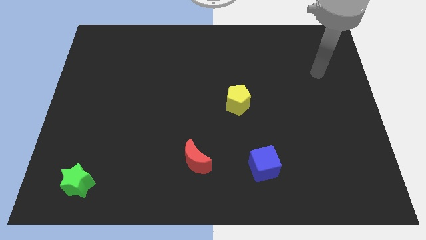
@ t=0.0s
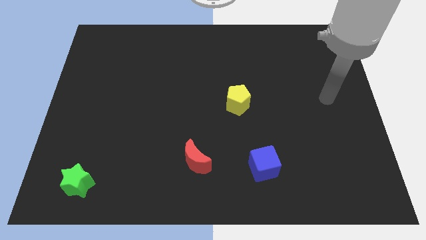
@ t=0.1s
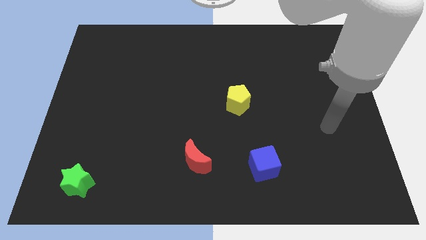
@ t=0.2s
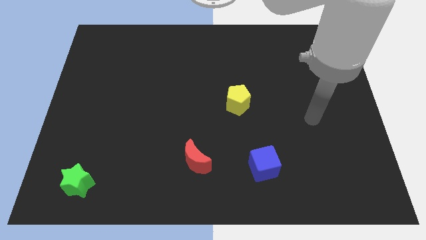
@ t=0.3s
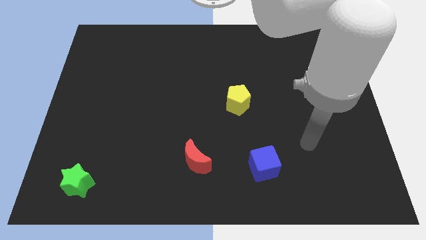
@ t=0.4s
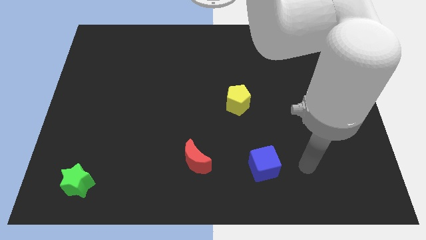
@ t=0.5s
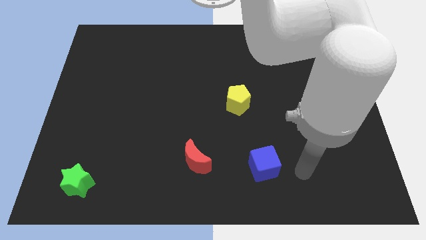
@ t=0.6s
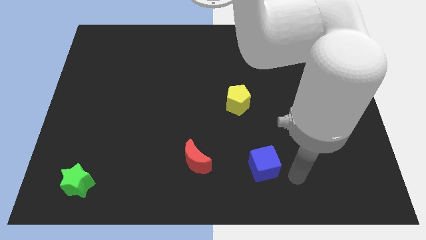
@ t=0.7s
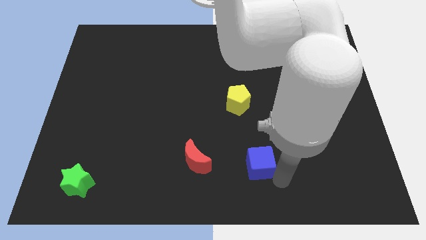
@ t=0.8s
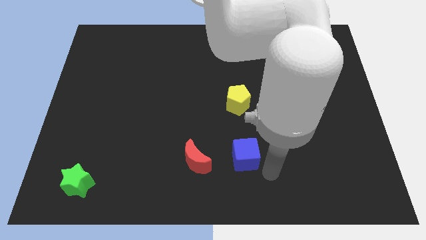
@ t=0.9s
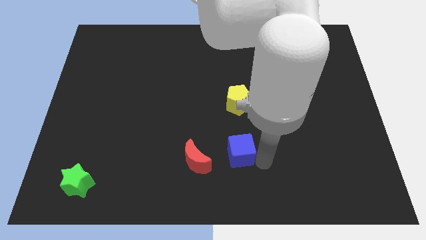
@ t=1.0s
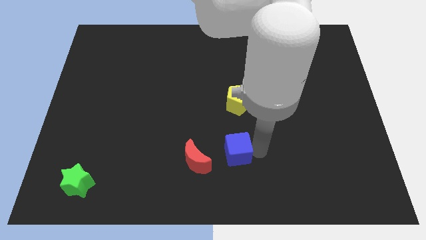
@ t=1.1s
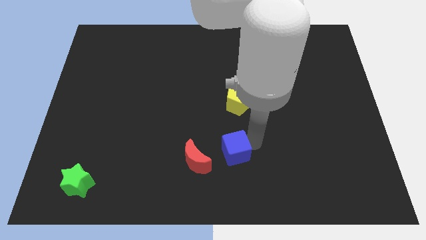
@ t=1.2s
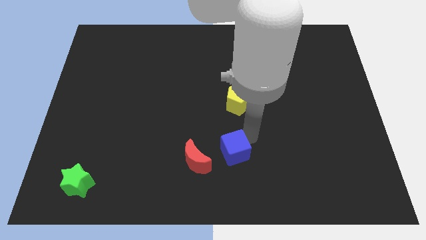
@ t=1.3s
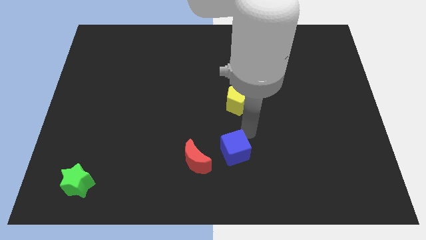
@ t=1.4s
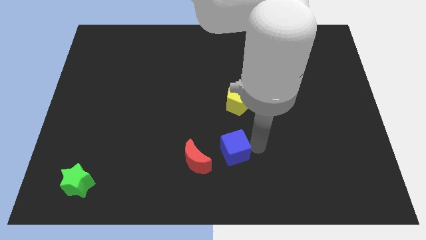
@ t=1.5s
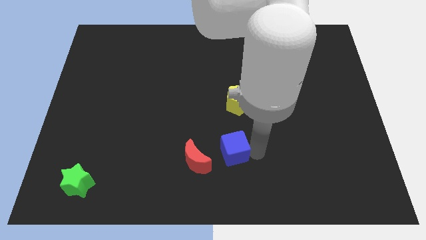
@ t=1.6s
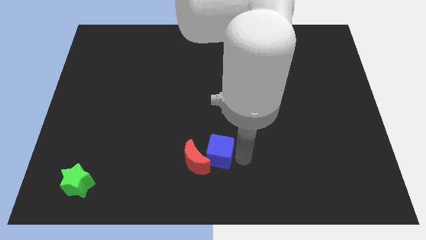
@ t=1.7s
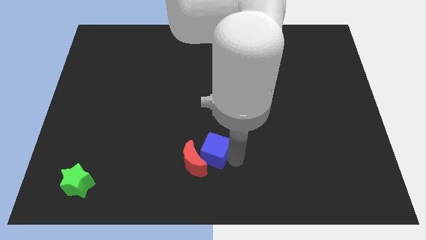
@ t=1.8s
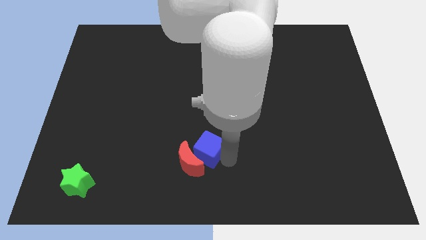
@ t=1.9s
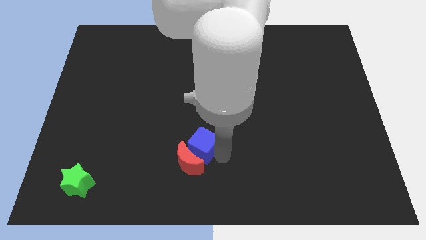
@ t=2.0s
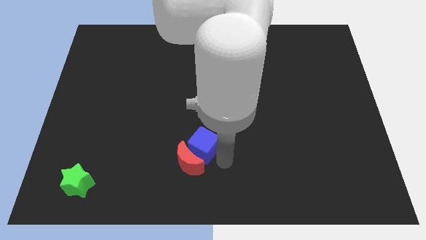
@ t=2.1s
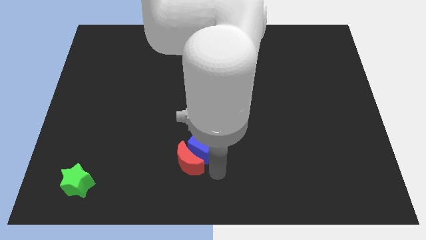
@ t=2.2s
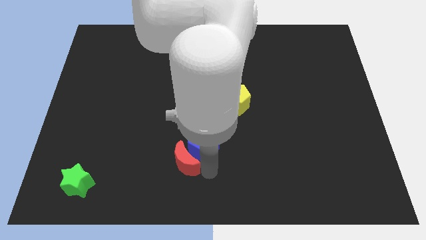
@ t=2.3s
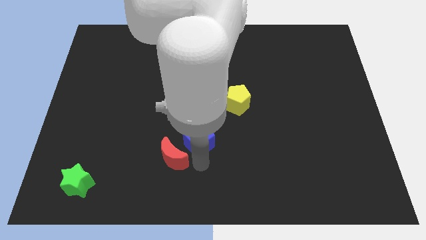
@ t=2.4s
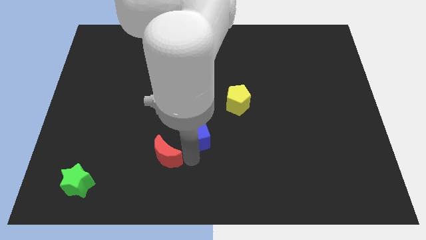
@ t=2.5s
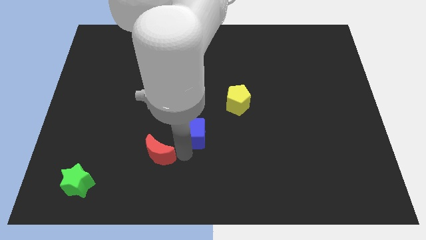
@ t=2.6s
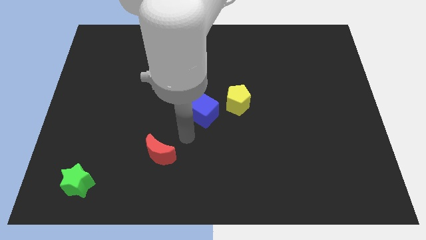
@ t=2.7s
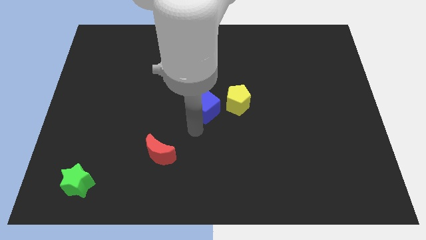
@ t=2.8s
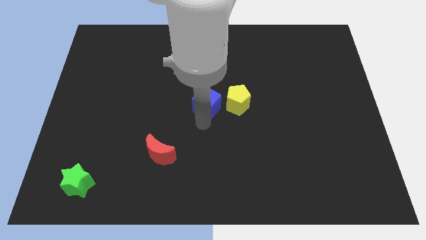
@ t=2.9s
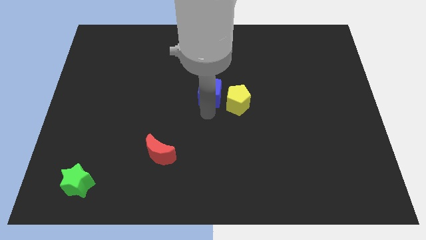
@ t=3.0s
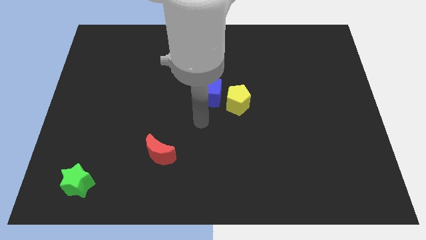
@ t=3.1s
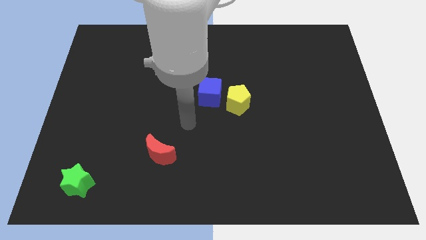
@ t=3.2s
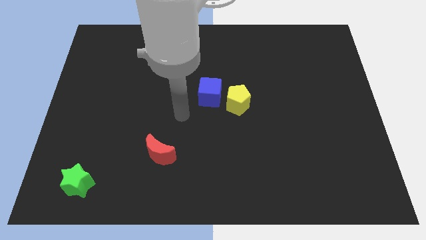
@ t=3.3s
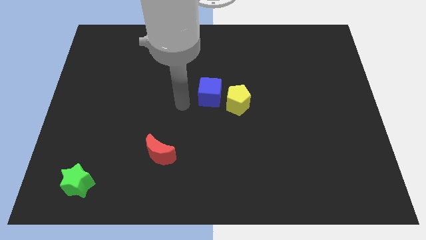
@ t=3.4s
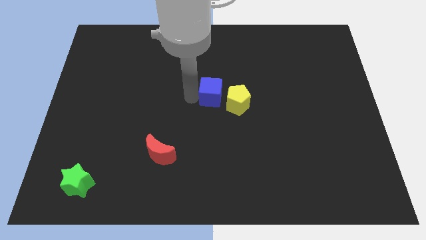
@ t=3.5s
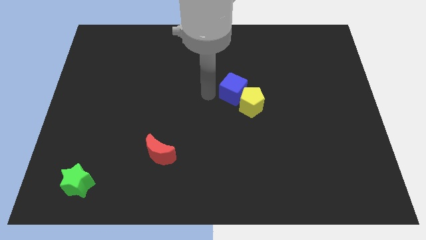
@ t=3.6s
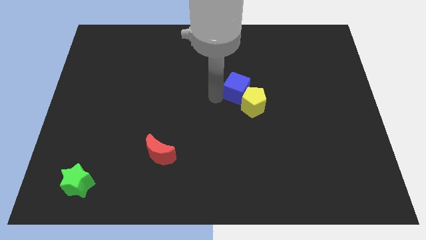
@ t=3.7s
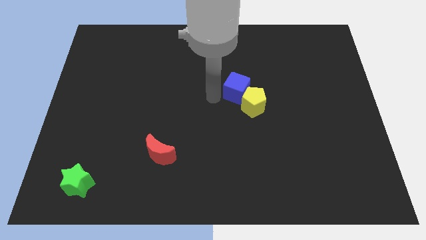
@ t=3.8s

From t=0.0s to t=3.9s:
slide the blue block next to the yellow block

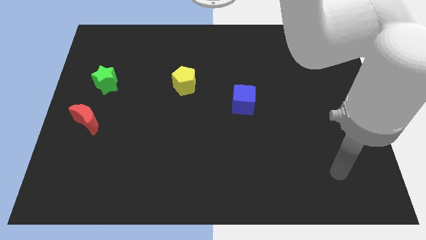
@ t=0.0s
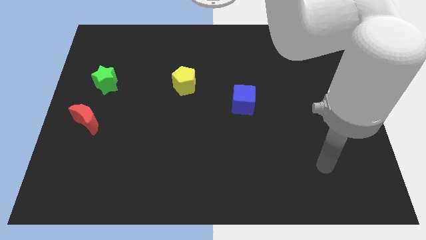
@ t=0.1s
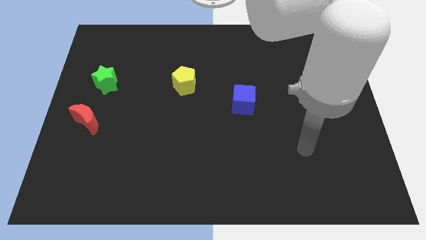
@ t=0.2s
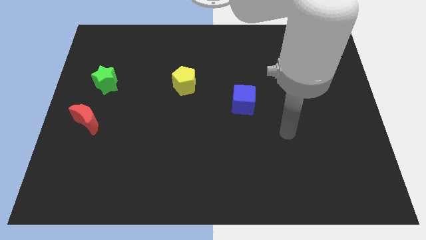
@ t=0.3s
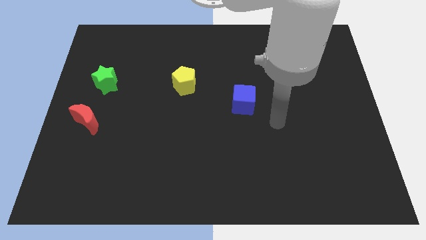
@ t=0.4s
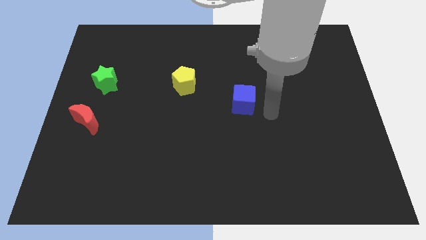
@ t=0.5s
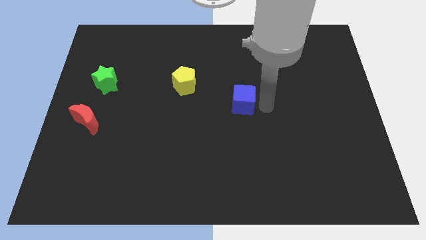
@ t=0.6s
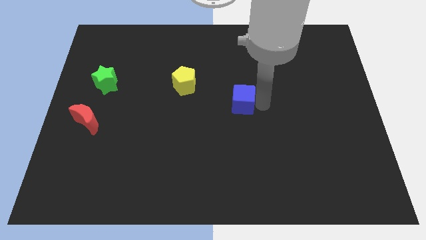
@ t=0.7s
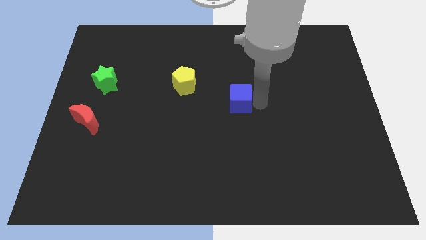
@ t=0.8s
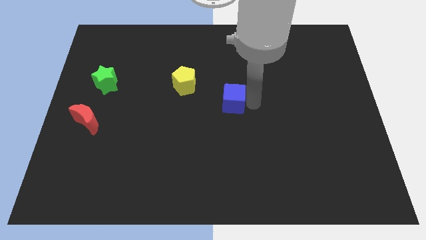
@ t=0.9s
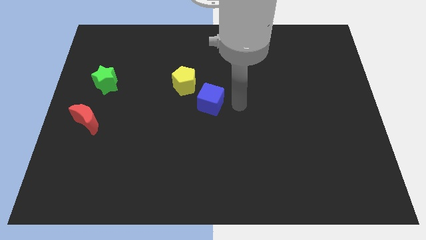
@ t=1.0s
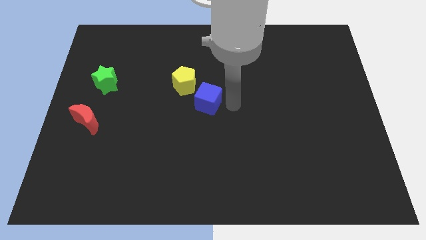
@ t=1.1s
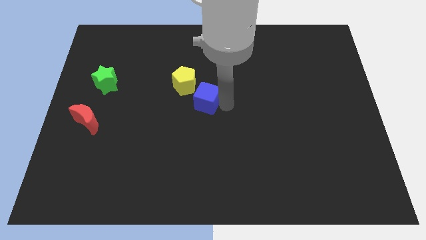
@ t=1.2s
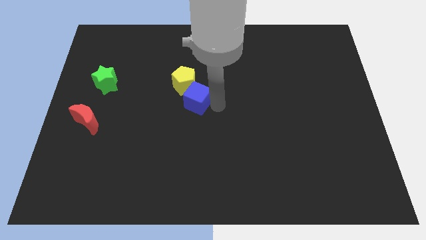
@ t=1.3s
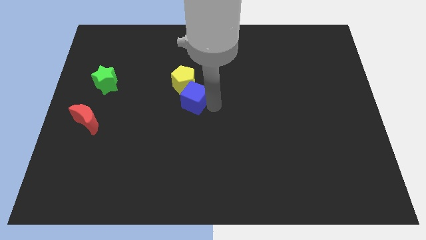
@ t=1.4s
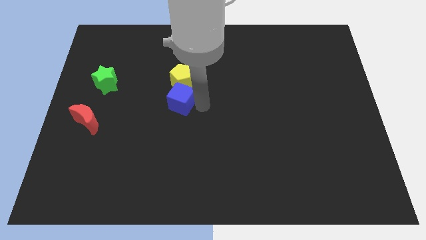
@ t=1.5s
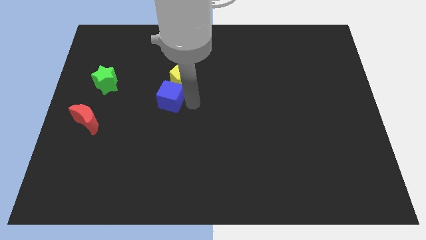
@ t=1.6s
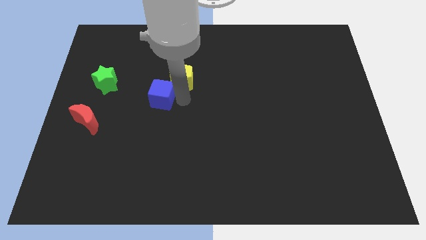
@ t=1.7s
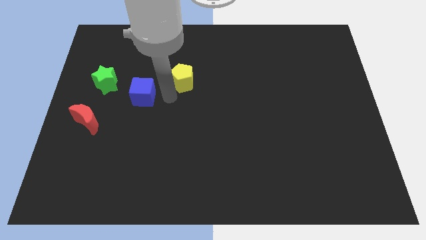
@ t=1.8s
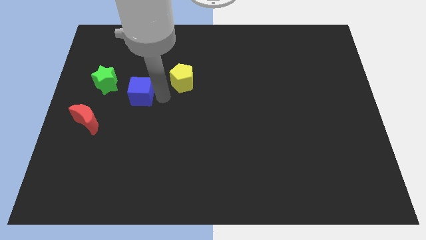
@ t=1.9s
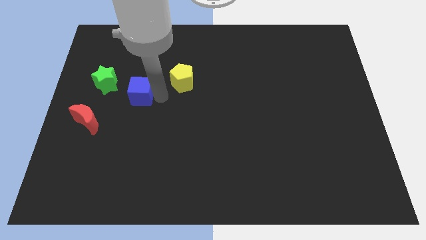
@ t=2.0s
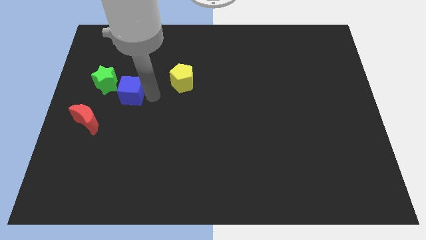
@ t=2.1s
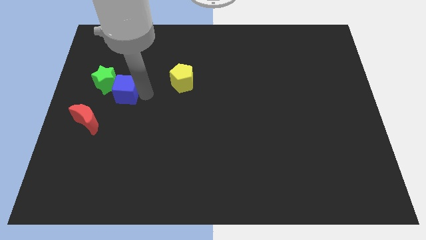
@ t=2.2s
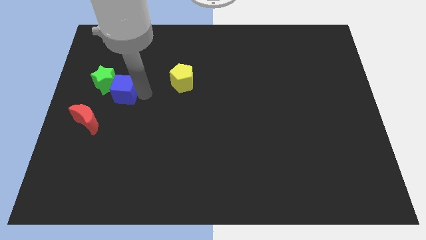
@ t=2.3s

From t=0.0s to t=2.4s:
put the blue block to the green block

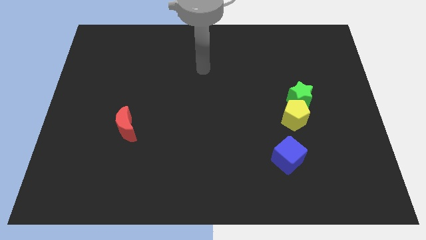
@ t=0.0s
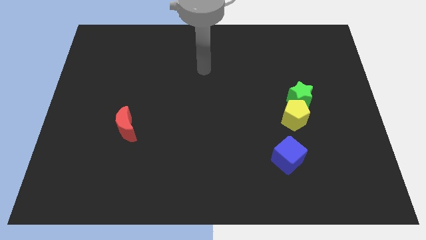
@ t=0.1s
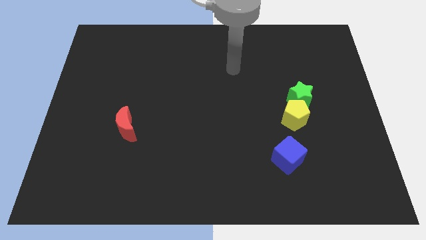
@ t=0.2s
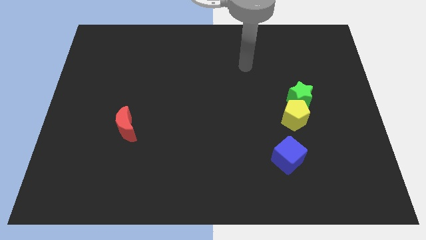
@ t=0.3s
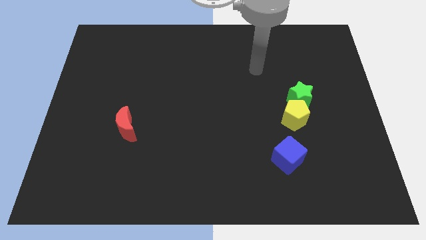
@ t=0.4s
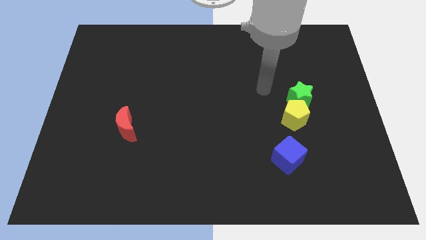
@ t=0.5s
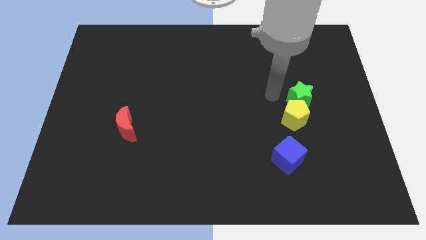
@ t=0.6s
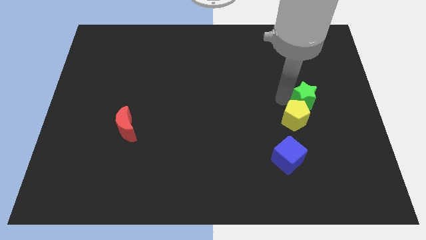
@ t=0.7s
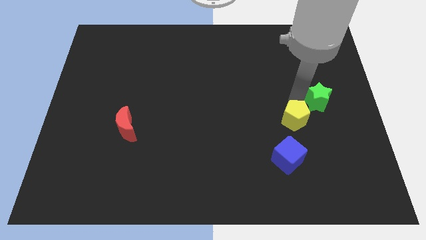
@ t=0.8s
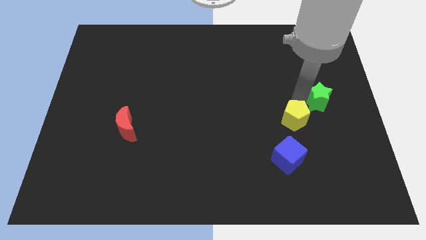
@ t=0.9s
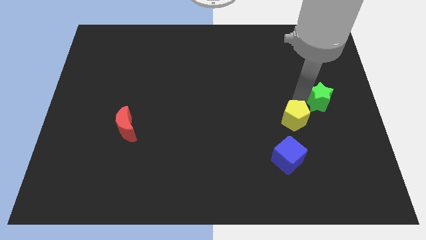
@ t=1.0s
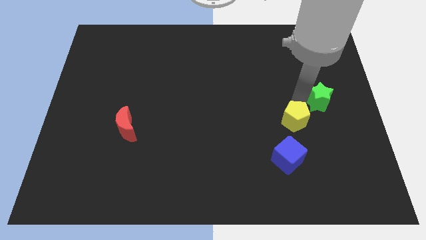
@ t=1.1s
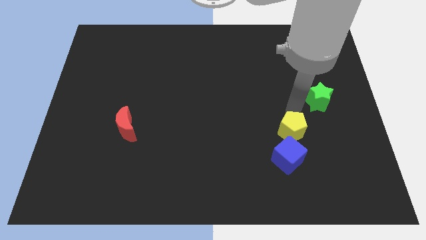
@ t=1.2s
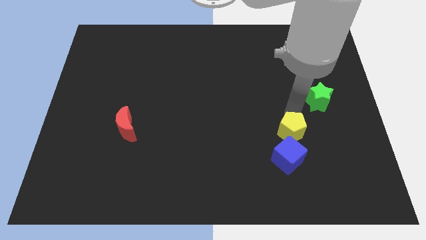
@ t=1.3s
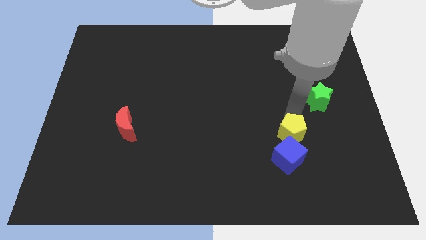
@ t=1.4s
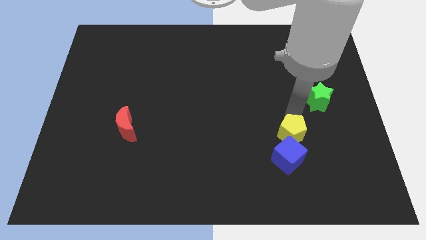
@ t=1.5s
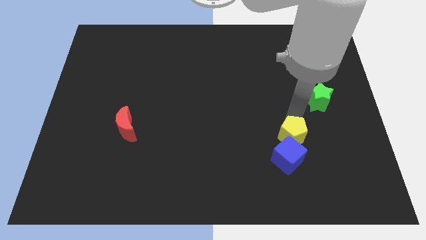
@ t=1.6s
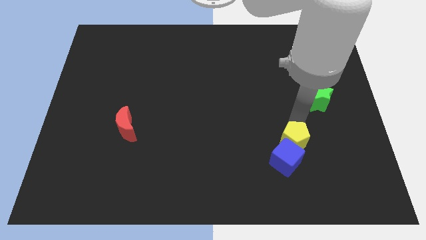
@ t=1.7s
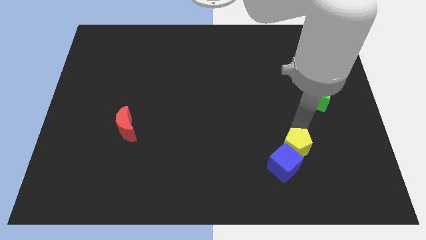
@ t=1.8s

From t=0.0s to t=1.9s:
move the pentagon towards the blue block

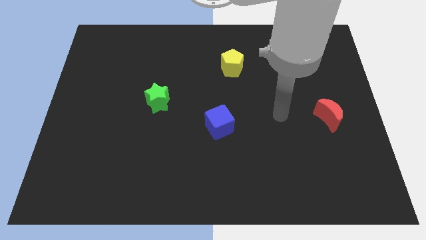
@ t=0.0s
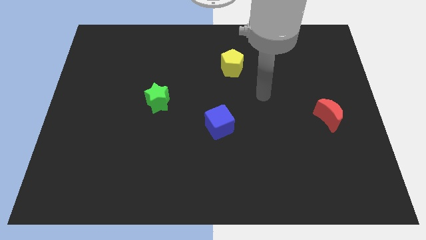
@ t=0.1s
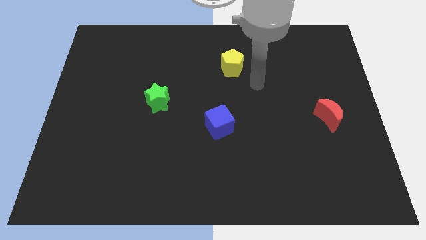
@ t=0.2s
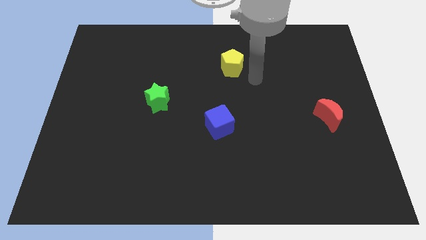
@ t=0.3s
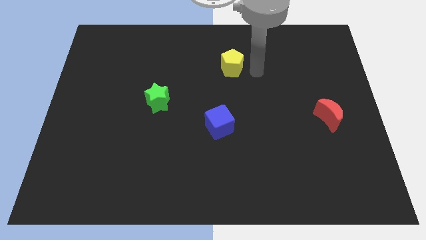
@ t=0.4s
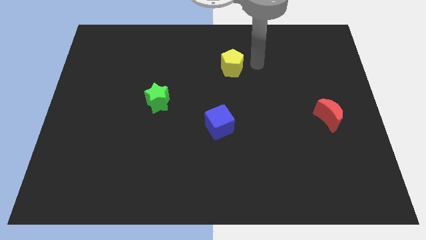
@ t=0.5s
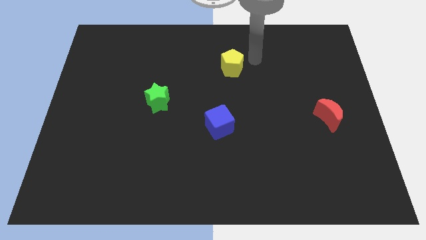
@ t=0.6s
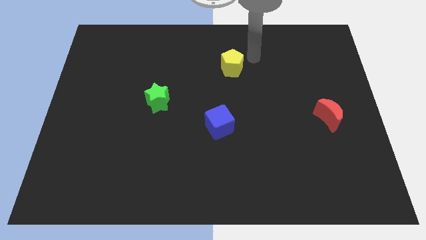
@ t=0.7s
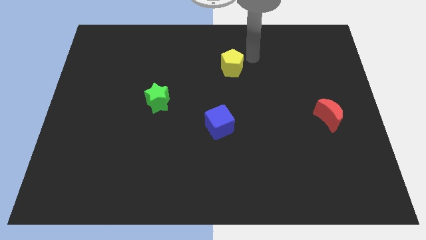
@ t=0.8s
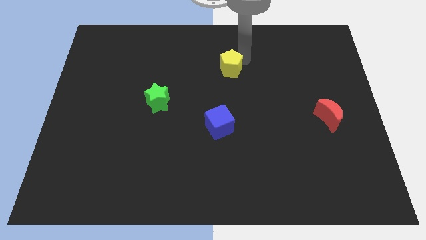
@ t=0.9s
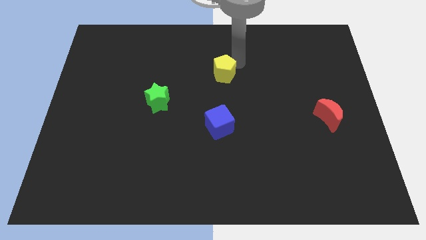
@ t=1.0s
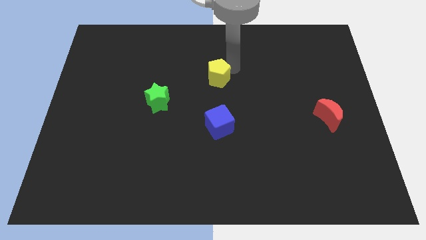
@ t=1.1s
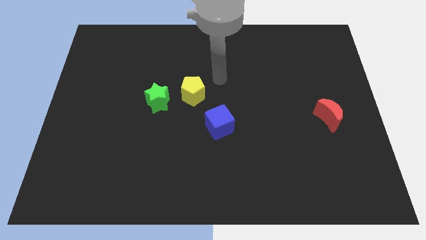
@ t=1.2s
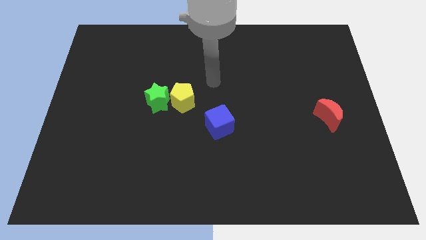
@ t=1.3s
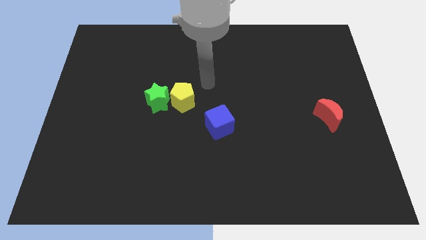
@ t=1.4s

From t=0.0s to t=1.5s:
push the yellow block close to the green star
